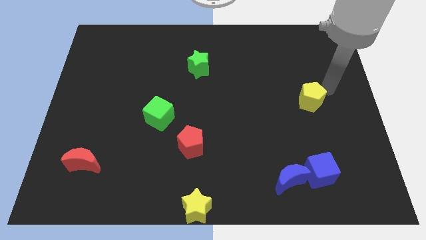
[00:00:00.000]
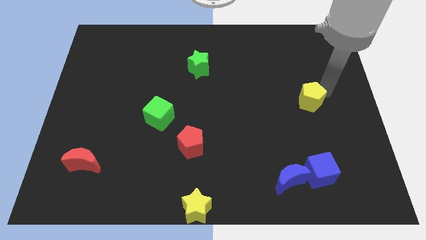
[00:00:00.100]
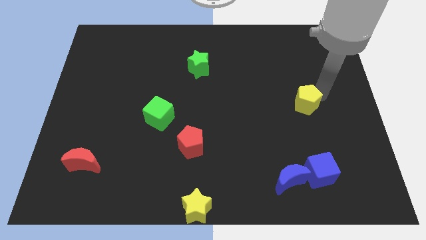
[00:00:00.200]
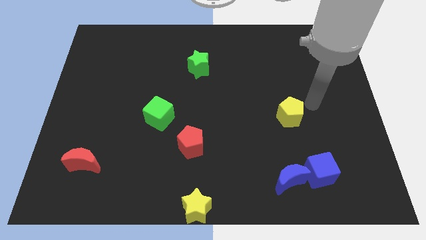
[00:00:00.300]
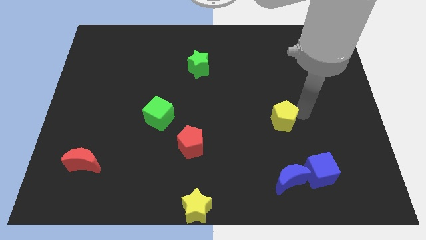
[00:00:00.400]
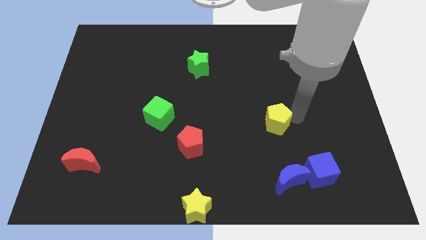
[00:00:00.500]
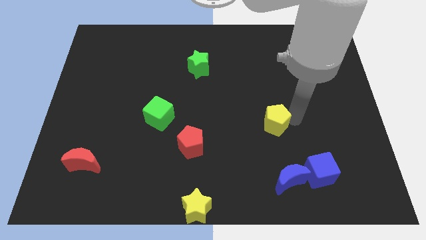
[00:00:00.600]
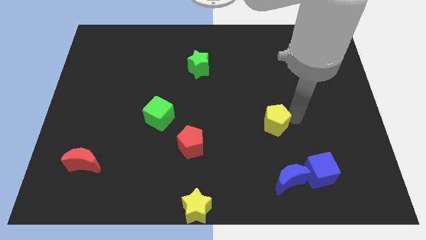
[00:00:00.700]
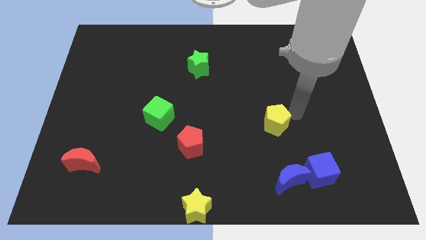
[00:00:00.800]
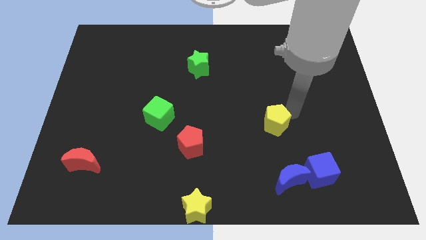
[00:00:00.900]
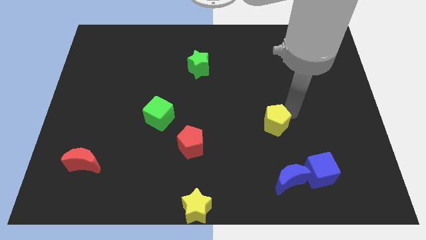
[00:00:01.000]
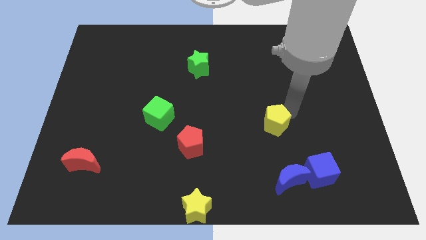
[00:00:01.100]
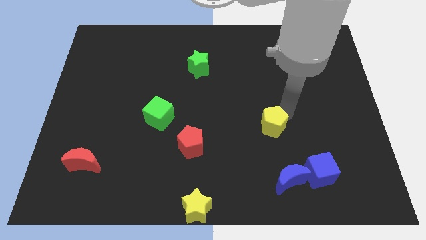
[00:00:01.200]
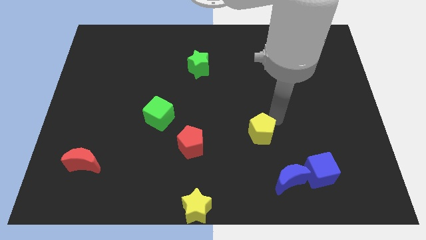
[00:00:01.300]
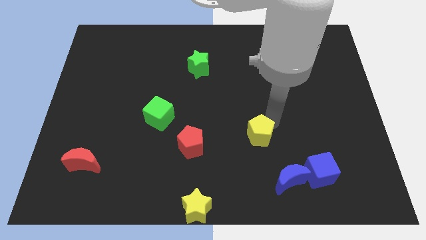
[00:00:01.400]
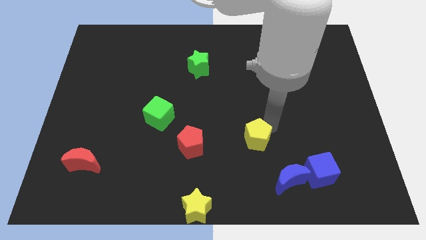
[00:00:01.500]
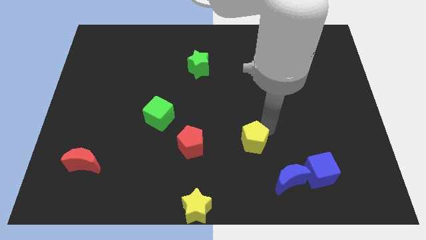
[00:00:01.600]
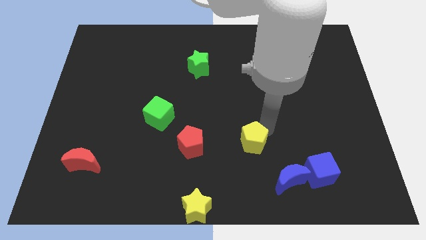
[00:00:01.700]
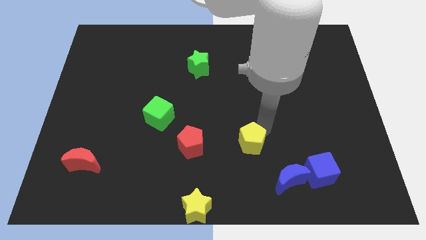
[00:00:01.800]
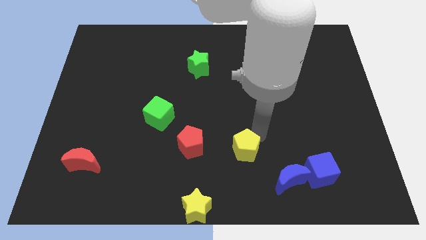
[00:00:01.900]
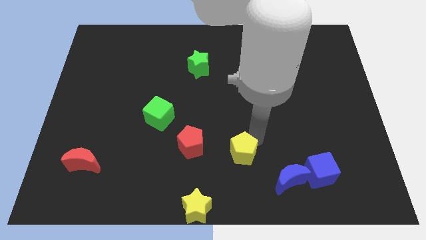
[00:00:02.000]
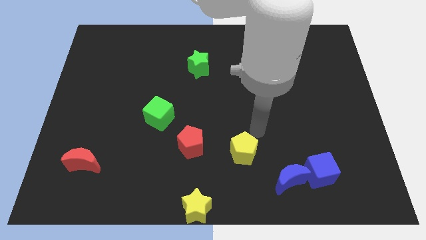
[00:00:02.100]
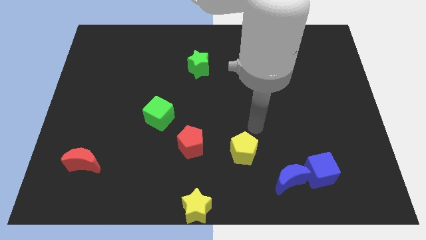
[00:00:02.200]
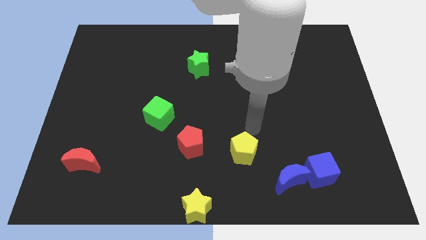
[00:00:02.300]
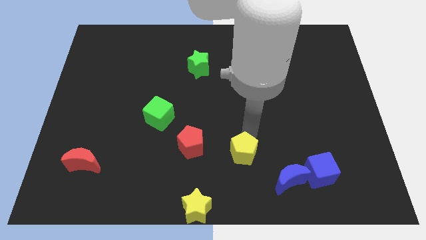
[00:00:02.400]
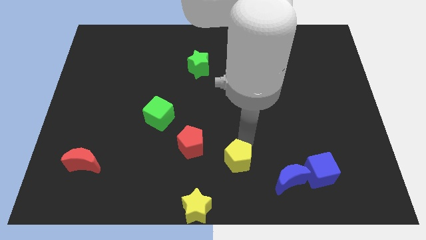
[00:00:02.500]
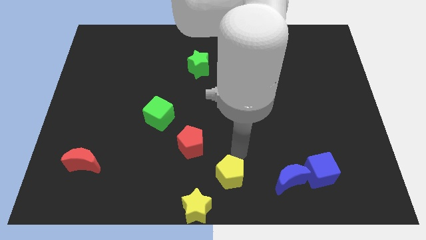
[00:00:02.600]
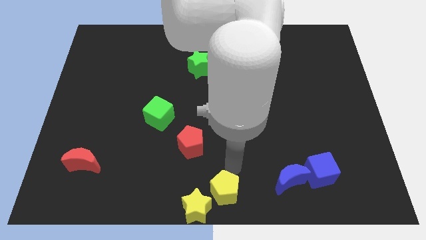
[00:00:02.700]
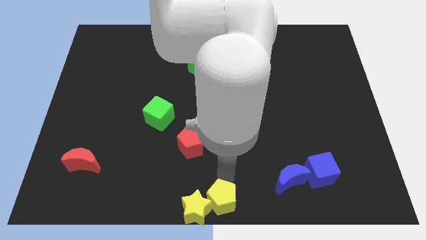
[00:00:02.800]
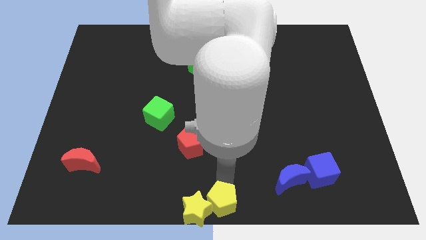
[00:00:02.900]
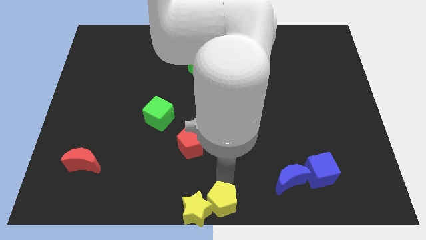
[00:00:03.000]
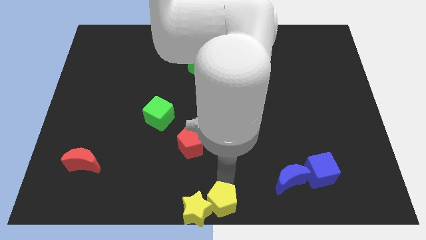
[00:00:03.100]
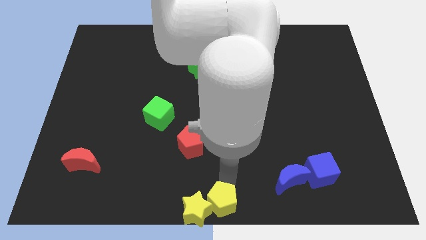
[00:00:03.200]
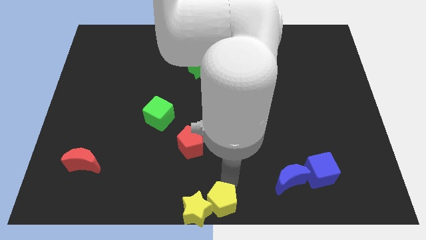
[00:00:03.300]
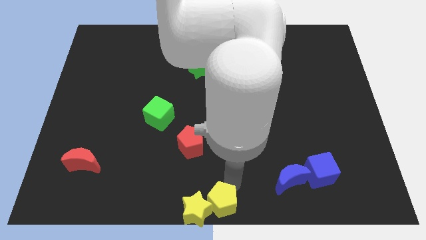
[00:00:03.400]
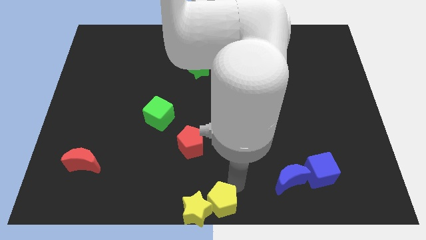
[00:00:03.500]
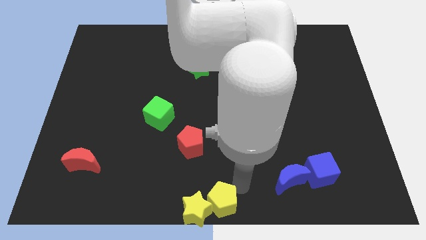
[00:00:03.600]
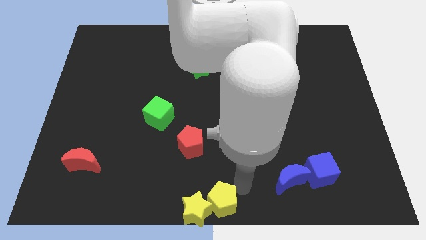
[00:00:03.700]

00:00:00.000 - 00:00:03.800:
move yellow pentagon to the yellow star

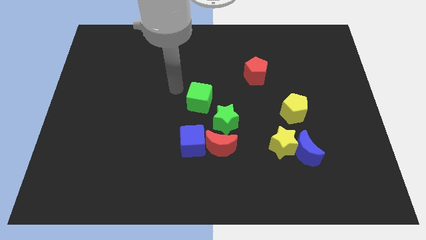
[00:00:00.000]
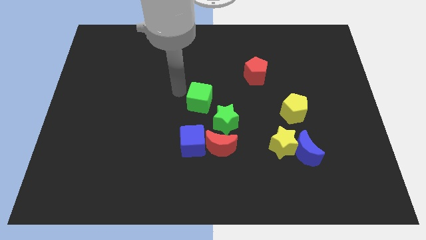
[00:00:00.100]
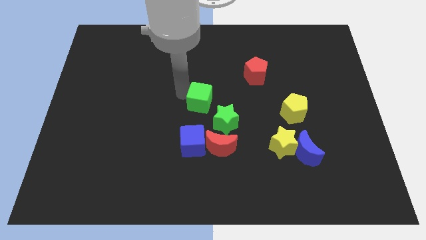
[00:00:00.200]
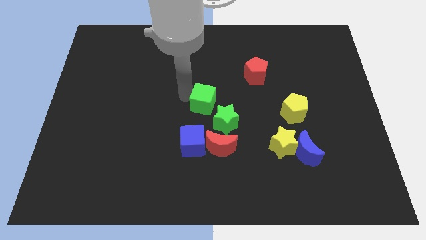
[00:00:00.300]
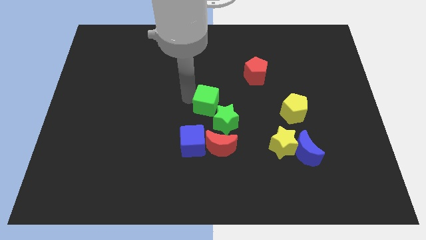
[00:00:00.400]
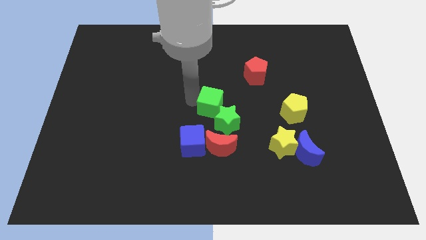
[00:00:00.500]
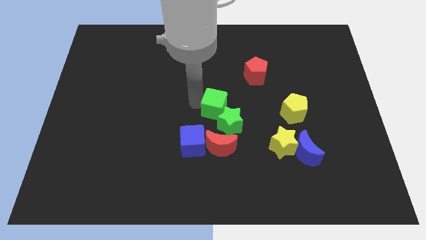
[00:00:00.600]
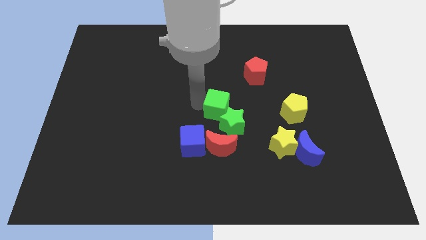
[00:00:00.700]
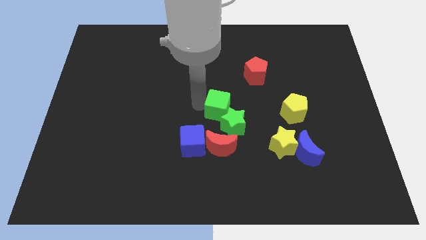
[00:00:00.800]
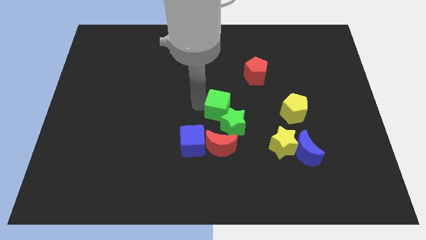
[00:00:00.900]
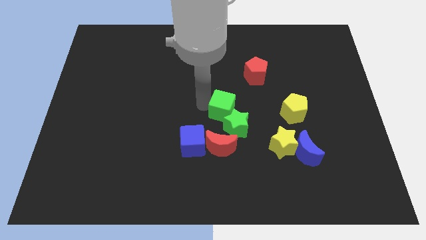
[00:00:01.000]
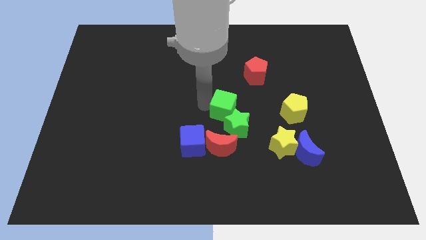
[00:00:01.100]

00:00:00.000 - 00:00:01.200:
push green cube into the green star

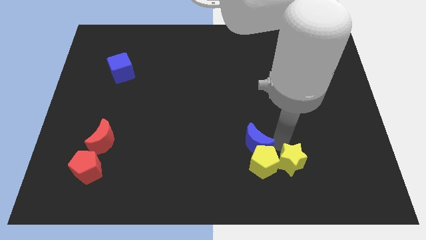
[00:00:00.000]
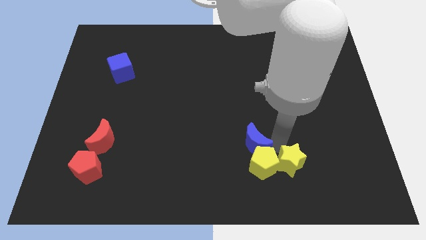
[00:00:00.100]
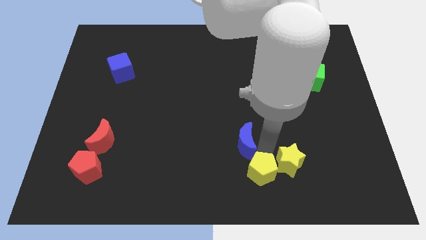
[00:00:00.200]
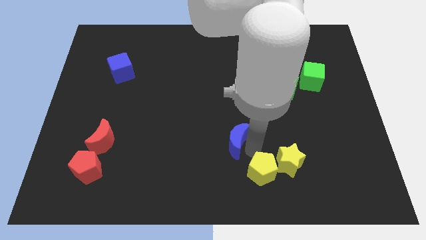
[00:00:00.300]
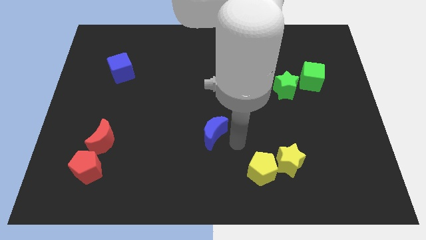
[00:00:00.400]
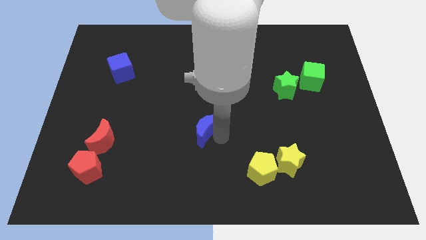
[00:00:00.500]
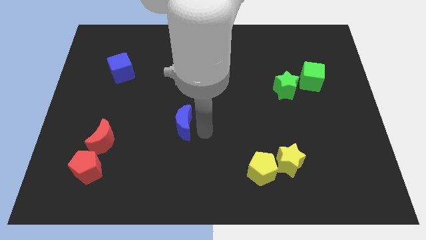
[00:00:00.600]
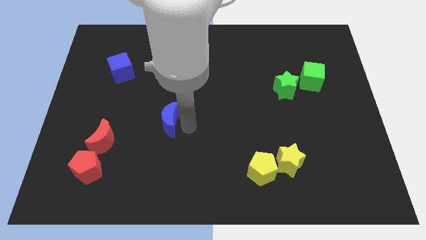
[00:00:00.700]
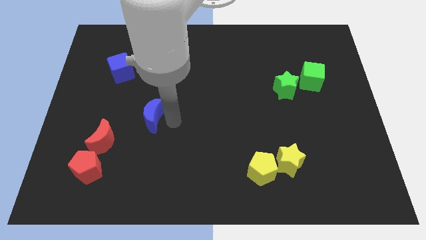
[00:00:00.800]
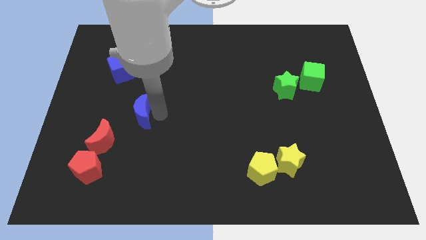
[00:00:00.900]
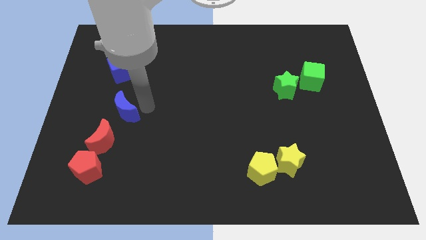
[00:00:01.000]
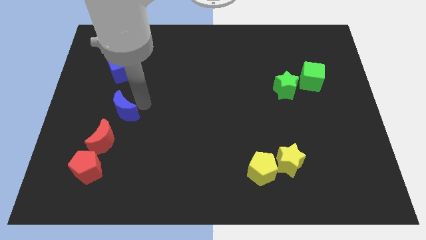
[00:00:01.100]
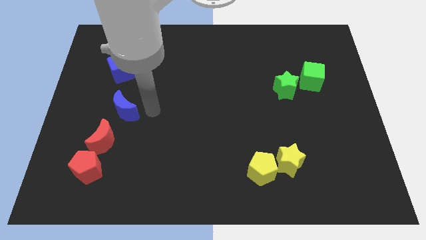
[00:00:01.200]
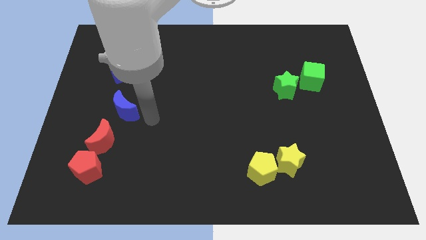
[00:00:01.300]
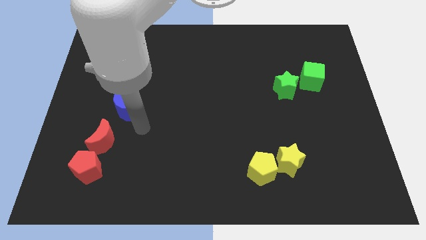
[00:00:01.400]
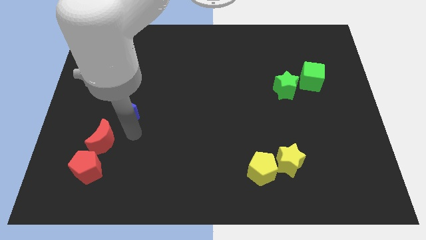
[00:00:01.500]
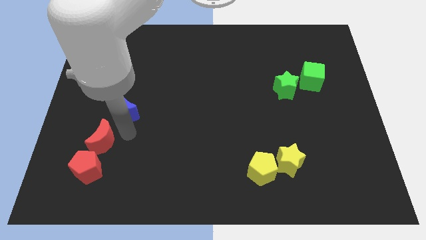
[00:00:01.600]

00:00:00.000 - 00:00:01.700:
move the blue moon diagonally to the red moon

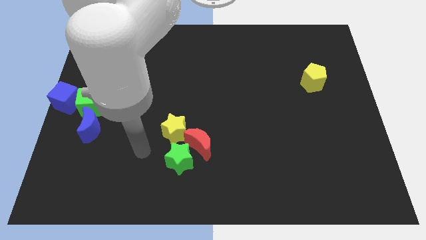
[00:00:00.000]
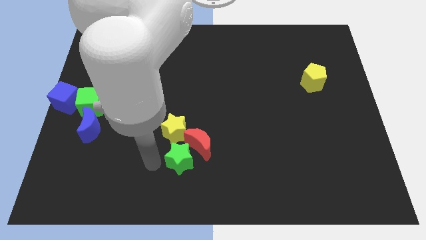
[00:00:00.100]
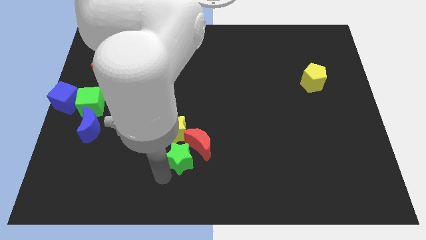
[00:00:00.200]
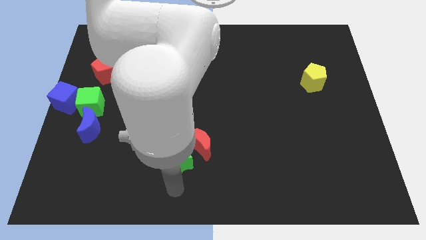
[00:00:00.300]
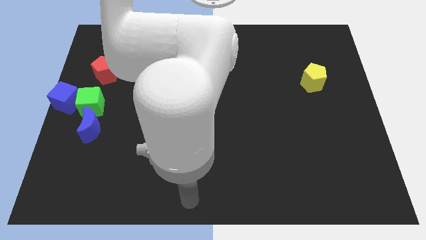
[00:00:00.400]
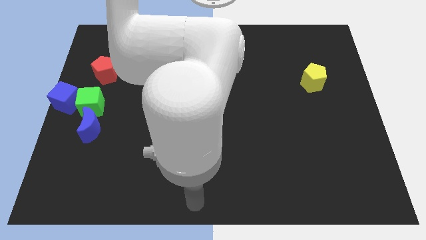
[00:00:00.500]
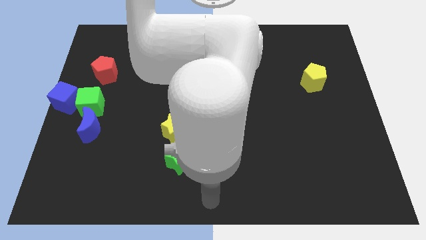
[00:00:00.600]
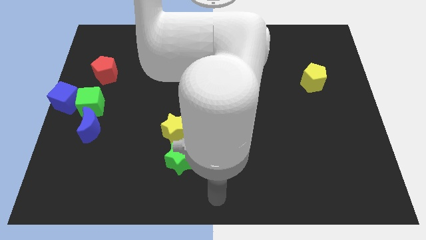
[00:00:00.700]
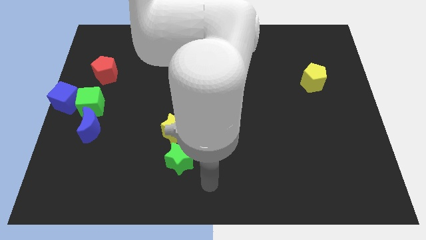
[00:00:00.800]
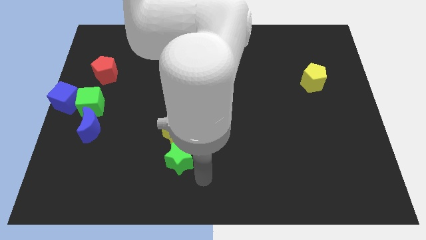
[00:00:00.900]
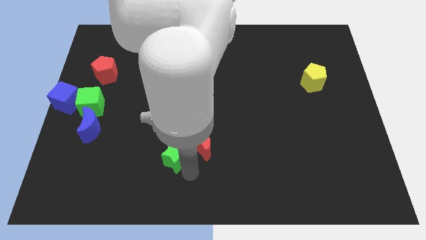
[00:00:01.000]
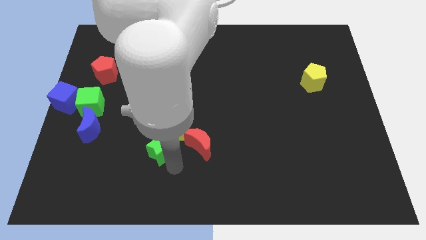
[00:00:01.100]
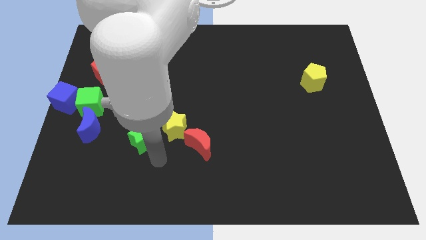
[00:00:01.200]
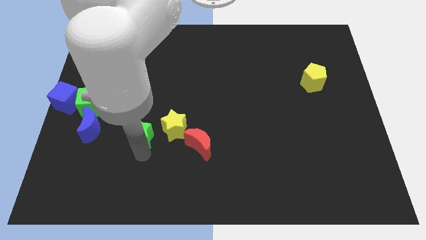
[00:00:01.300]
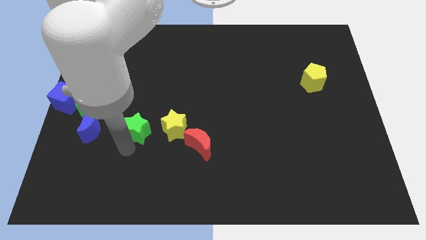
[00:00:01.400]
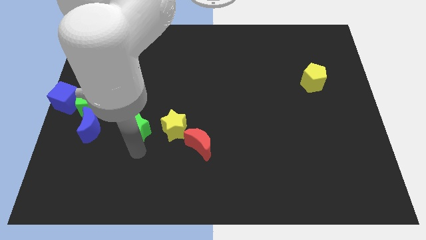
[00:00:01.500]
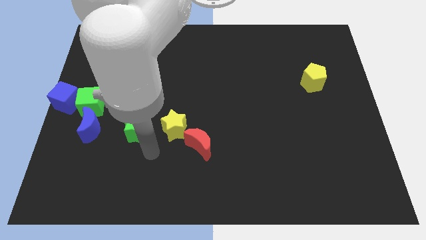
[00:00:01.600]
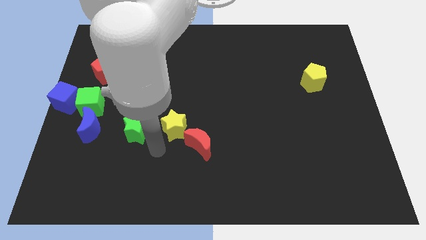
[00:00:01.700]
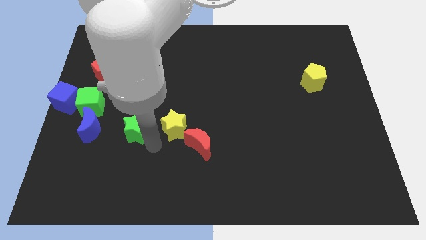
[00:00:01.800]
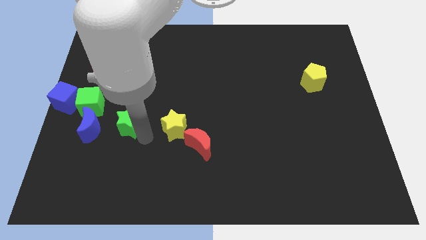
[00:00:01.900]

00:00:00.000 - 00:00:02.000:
place the green star to the left side of the yellow star
